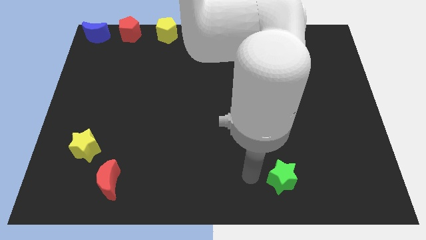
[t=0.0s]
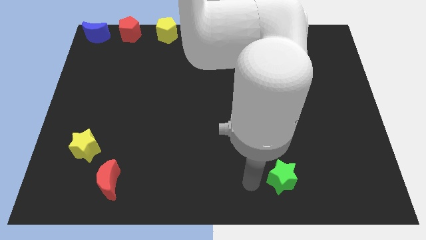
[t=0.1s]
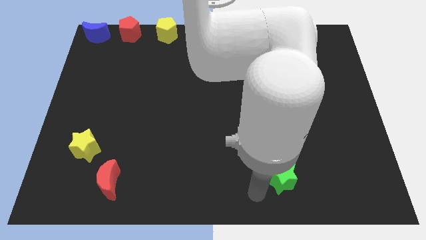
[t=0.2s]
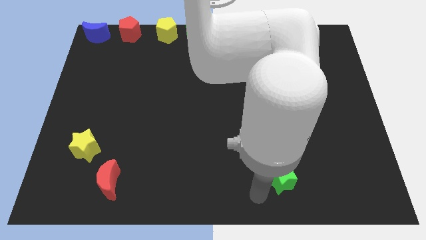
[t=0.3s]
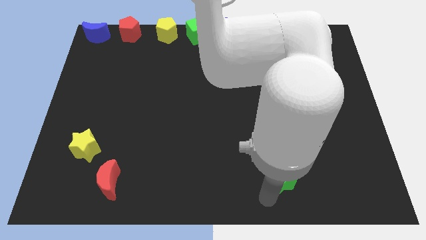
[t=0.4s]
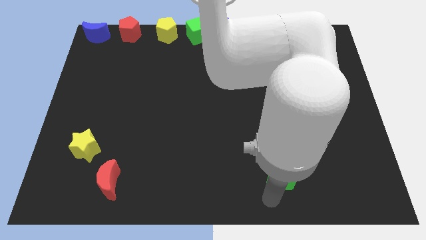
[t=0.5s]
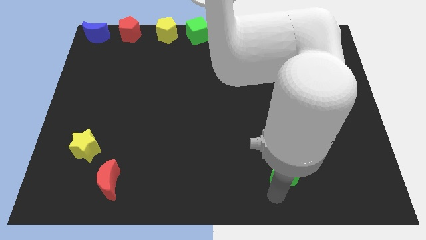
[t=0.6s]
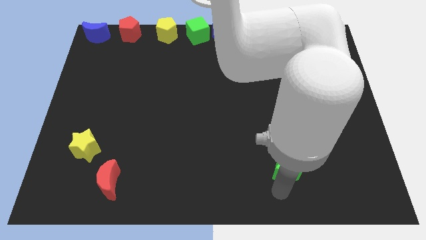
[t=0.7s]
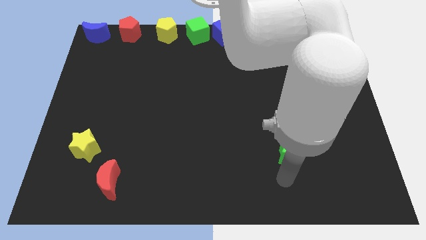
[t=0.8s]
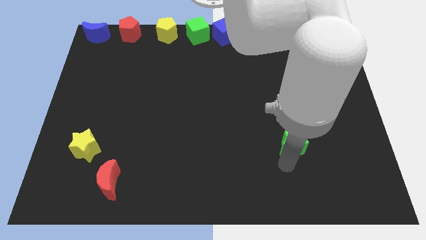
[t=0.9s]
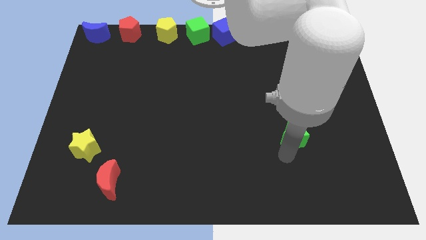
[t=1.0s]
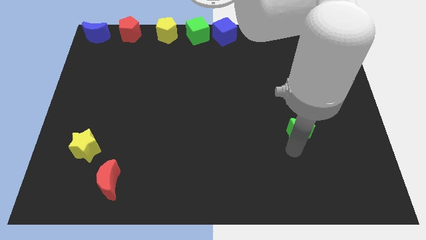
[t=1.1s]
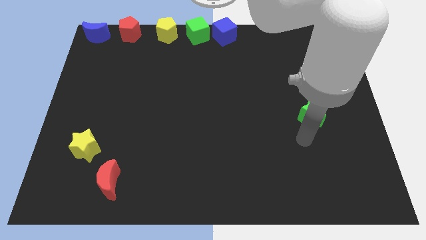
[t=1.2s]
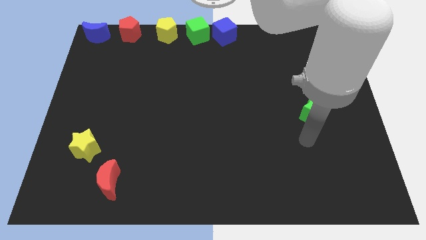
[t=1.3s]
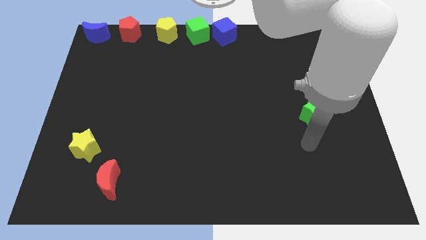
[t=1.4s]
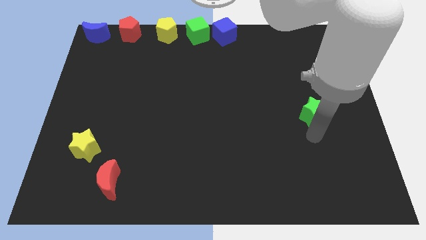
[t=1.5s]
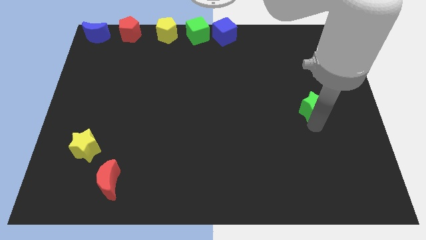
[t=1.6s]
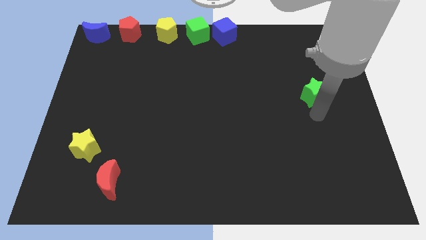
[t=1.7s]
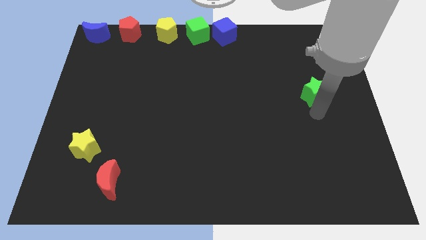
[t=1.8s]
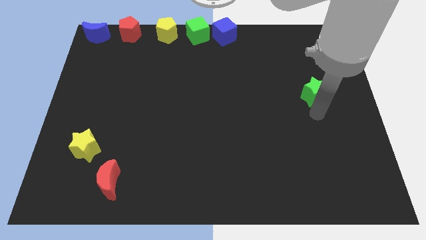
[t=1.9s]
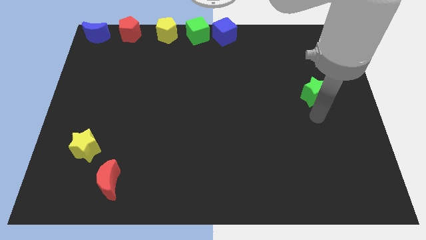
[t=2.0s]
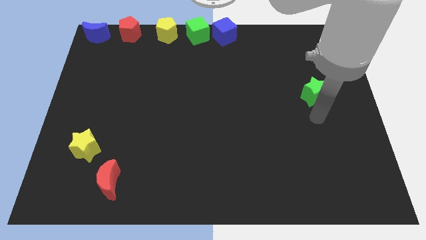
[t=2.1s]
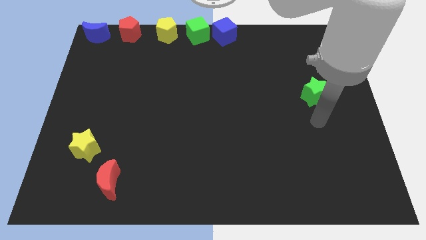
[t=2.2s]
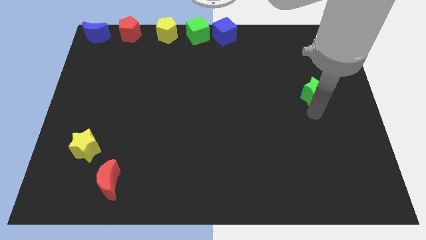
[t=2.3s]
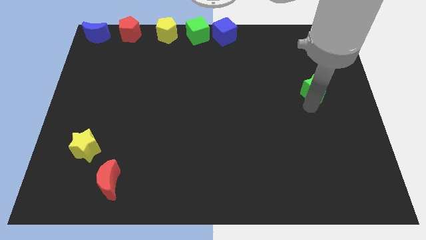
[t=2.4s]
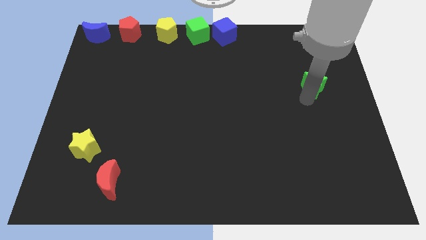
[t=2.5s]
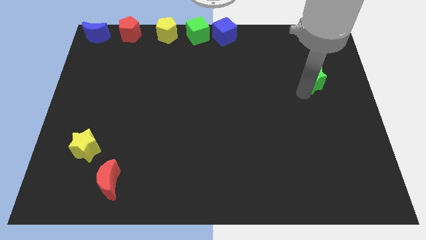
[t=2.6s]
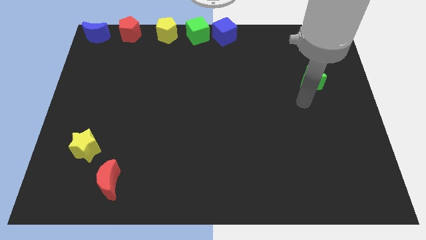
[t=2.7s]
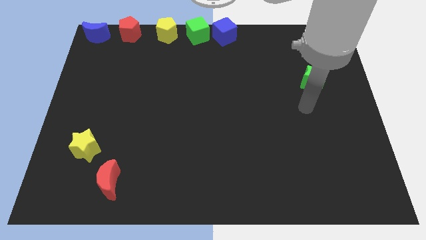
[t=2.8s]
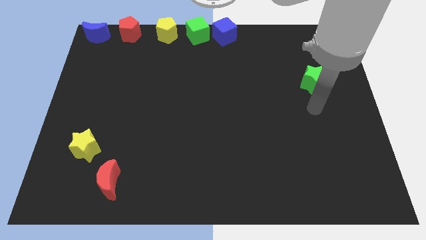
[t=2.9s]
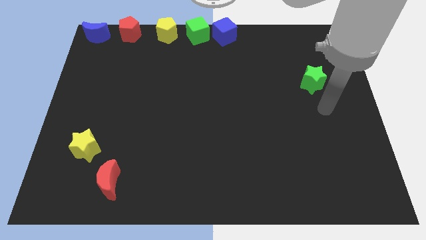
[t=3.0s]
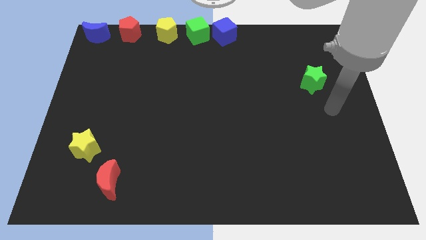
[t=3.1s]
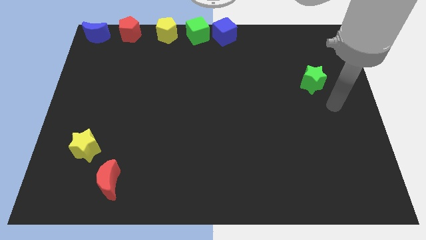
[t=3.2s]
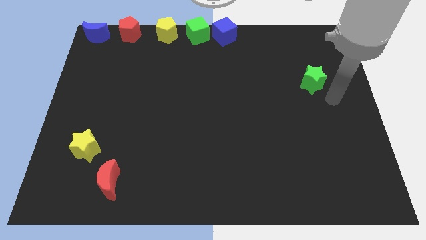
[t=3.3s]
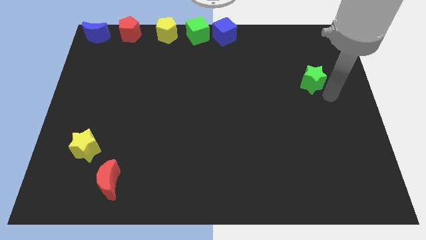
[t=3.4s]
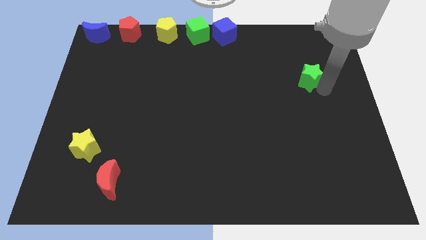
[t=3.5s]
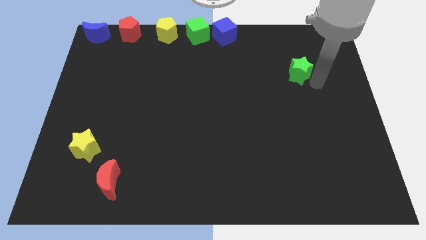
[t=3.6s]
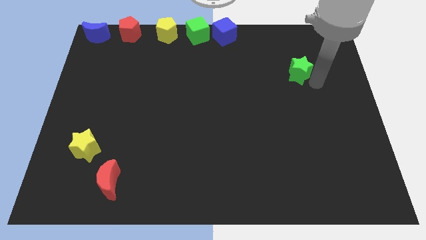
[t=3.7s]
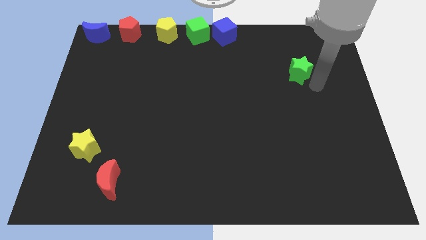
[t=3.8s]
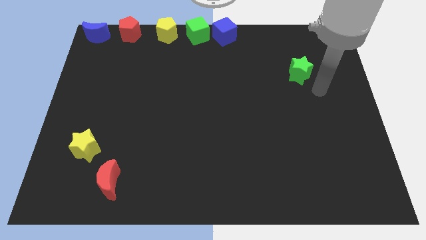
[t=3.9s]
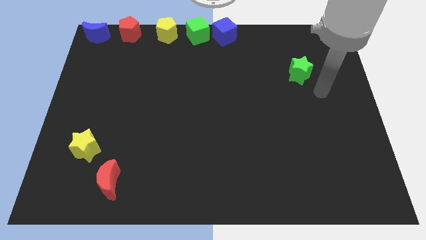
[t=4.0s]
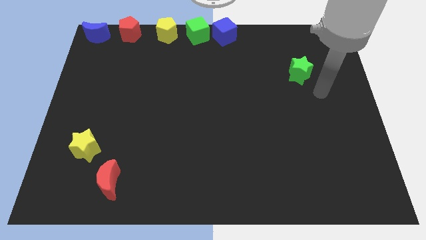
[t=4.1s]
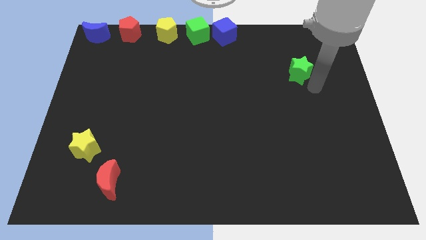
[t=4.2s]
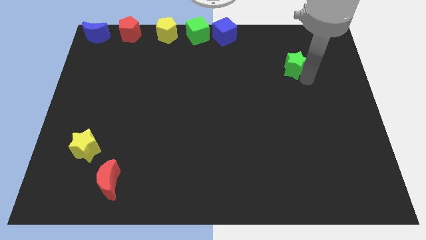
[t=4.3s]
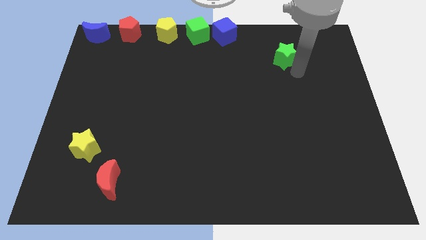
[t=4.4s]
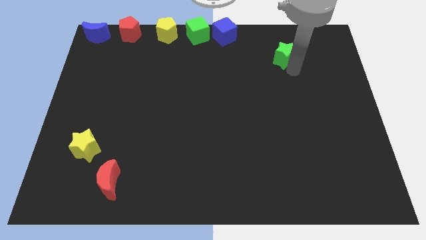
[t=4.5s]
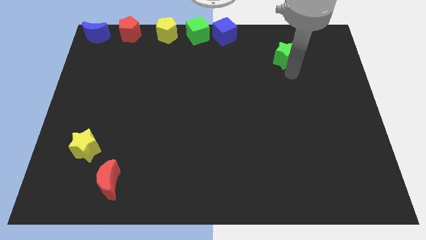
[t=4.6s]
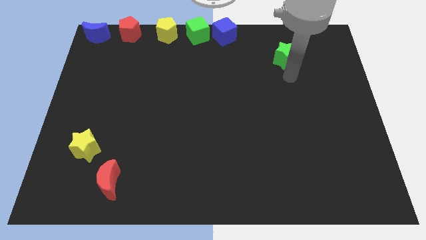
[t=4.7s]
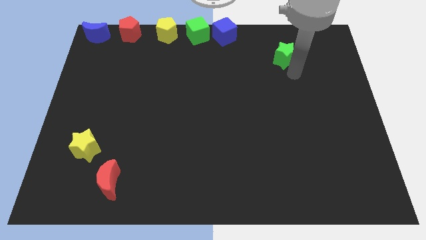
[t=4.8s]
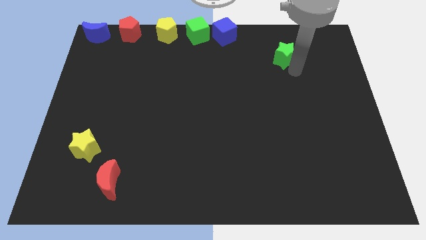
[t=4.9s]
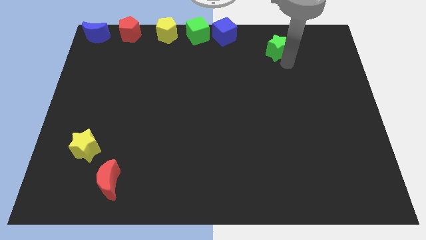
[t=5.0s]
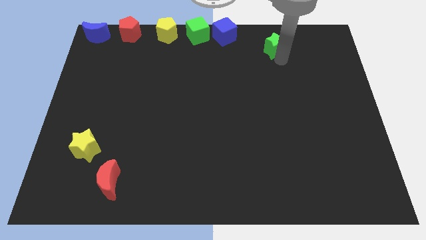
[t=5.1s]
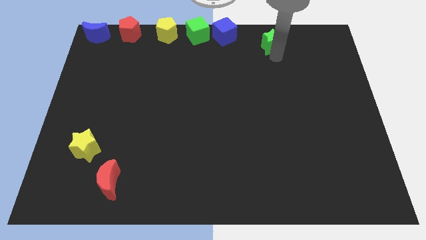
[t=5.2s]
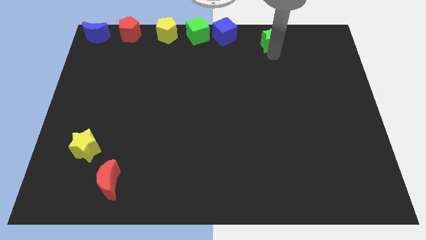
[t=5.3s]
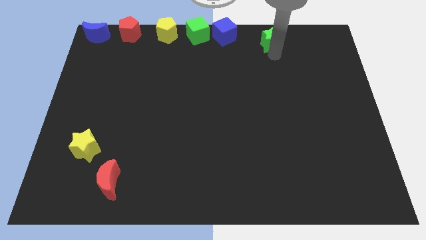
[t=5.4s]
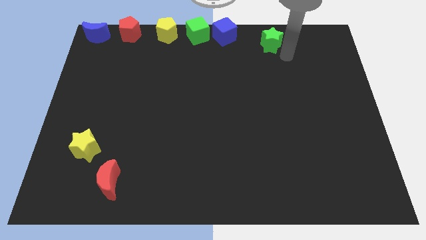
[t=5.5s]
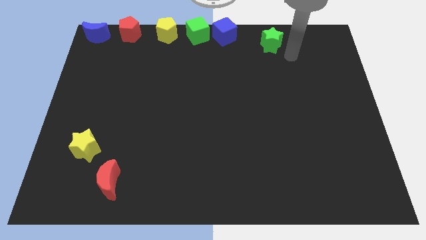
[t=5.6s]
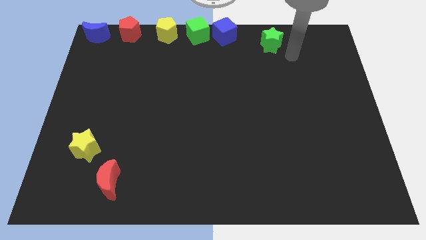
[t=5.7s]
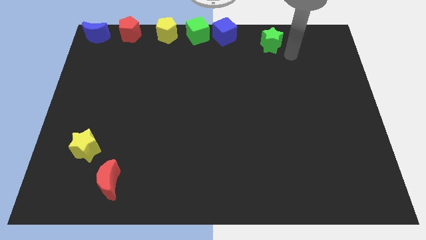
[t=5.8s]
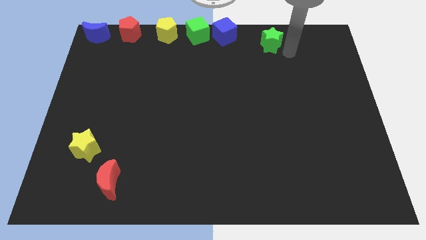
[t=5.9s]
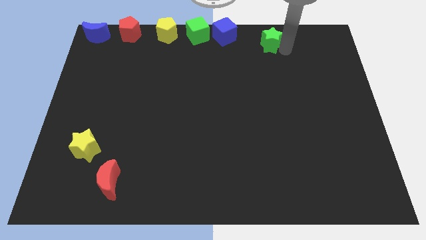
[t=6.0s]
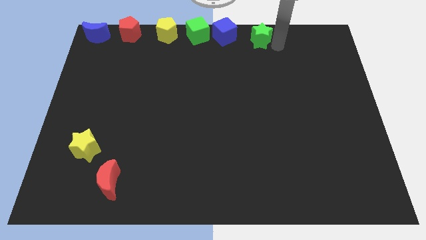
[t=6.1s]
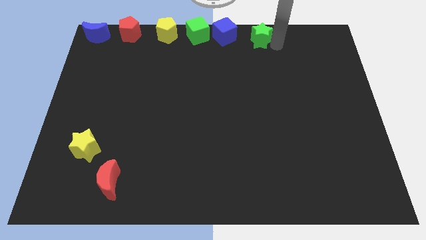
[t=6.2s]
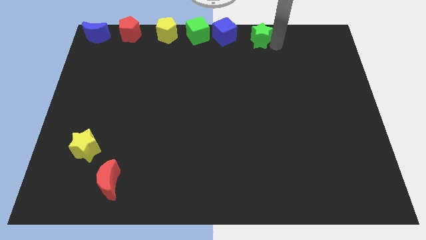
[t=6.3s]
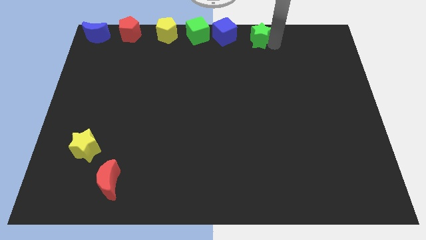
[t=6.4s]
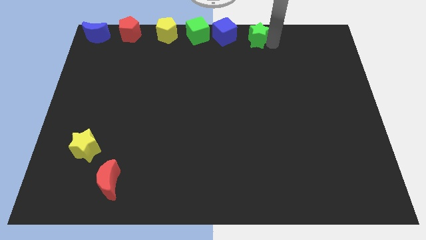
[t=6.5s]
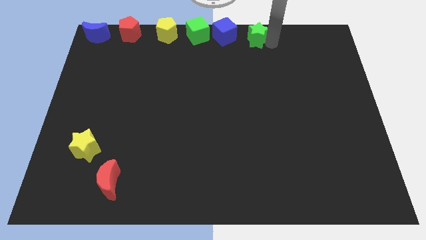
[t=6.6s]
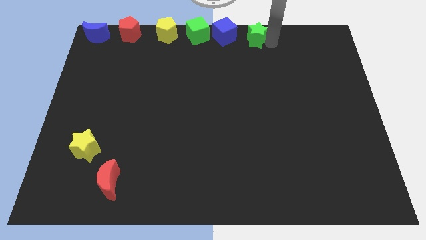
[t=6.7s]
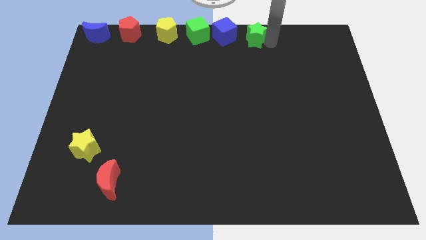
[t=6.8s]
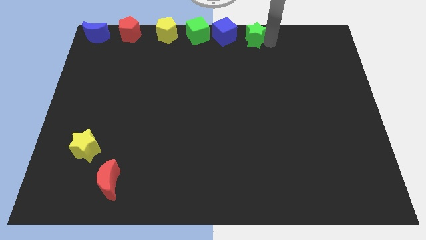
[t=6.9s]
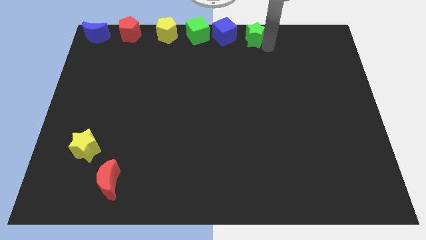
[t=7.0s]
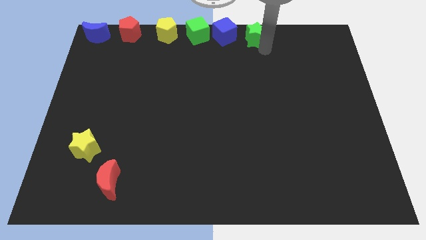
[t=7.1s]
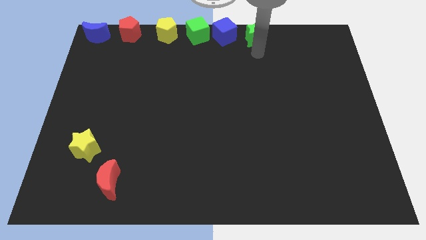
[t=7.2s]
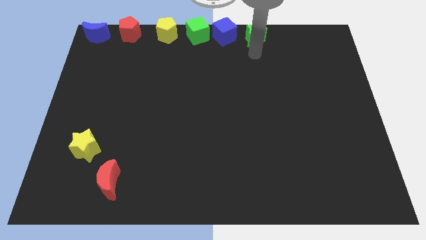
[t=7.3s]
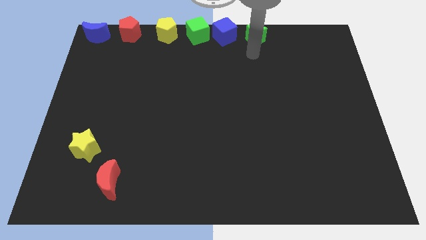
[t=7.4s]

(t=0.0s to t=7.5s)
move the green star to the right side of the blue cube

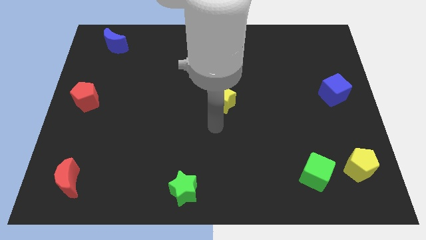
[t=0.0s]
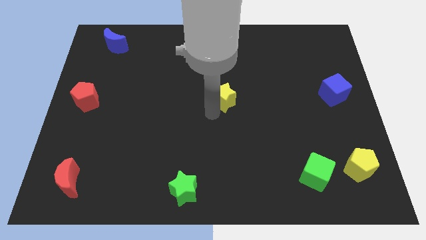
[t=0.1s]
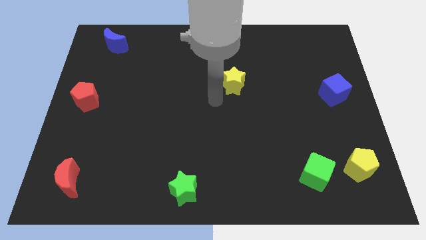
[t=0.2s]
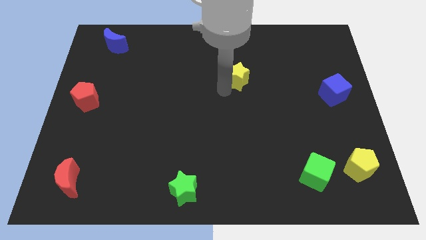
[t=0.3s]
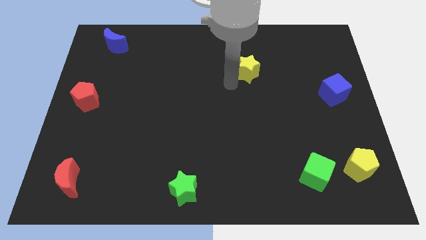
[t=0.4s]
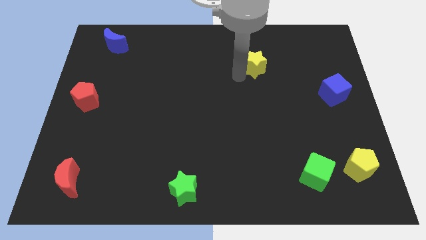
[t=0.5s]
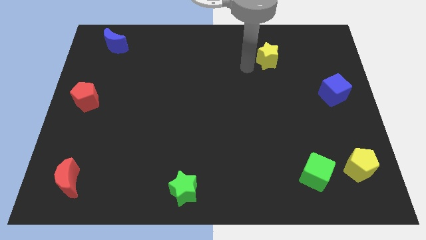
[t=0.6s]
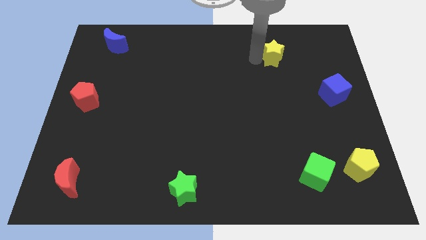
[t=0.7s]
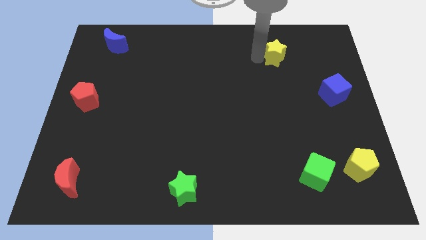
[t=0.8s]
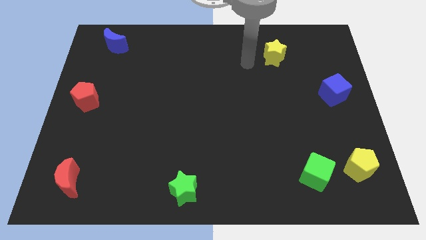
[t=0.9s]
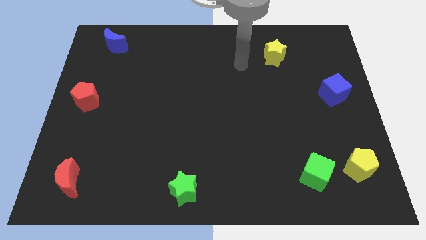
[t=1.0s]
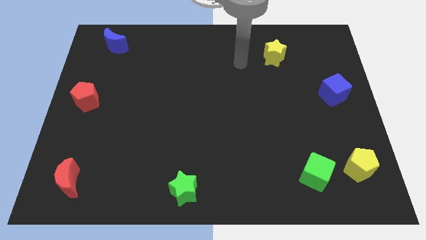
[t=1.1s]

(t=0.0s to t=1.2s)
move the yellow star to the top right of the board

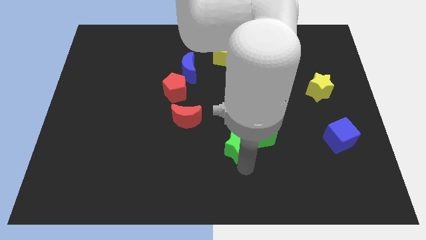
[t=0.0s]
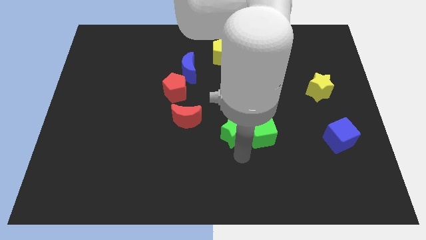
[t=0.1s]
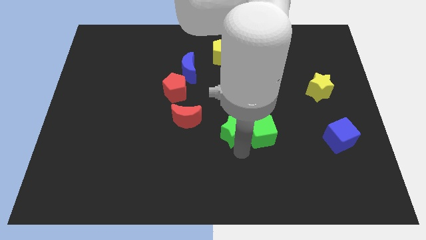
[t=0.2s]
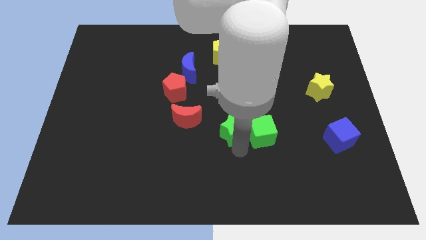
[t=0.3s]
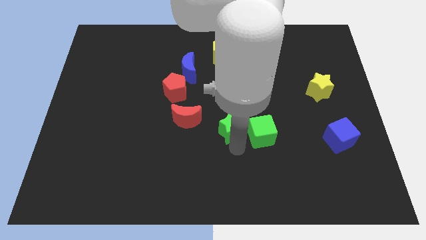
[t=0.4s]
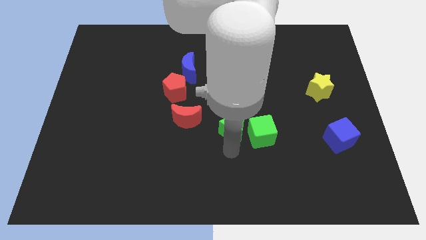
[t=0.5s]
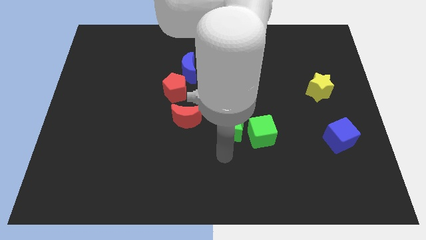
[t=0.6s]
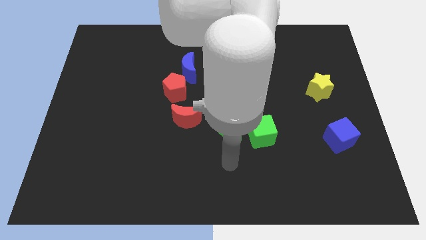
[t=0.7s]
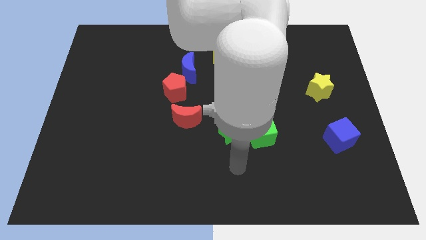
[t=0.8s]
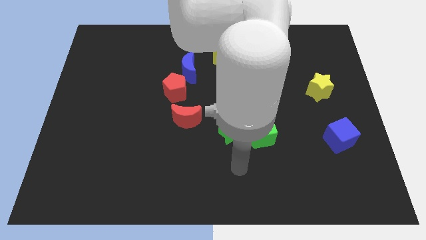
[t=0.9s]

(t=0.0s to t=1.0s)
push the green star slightly upwards
